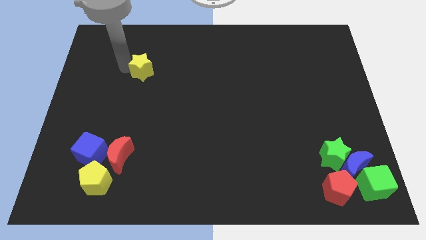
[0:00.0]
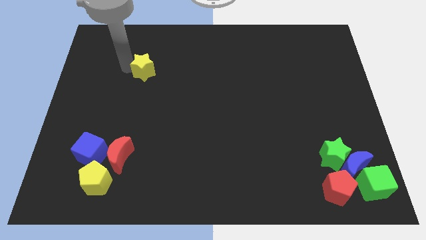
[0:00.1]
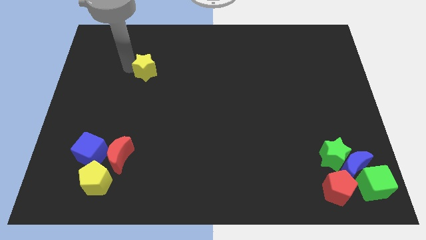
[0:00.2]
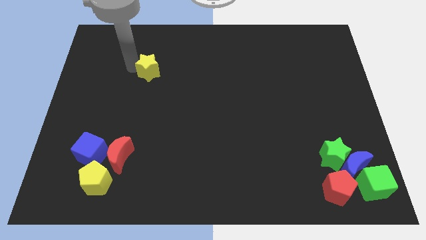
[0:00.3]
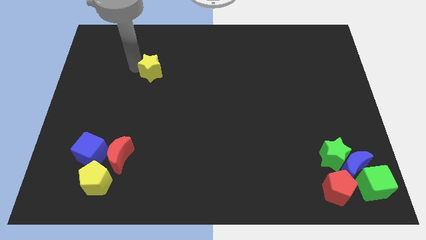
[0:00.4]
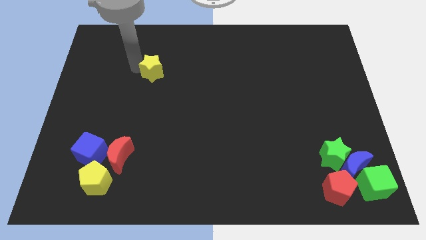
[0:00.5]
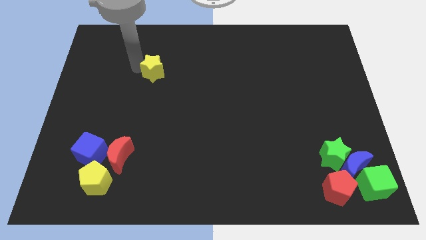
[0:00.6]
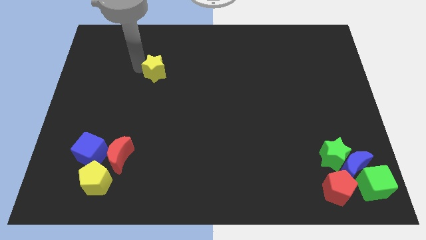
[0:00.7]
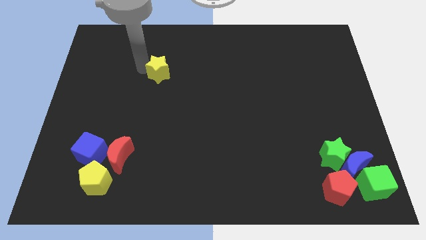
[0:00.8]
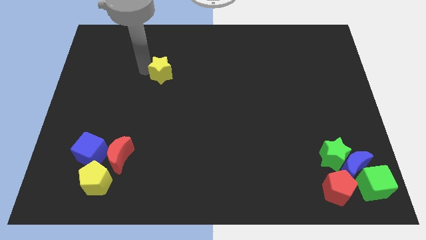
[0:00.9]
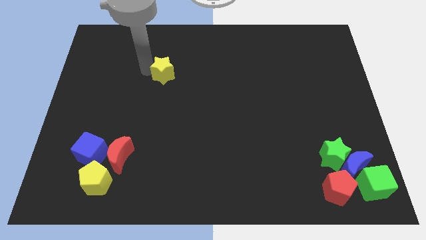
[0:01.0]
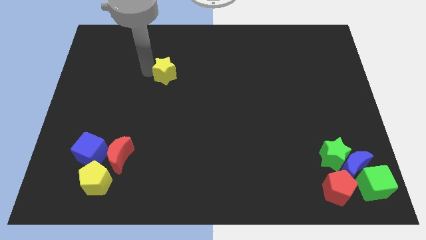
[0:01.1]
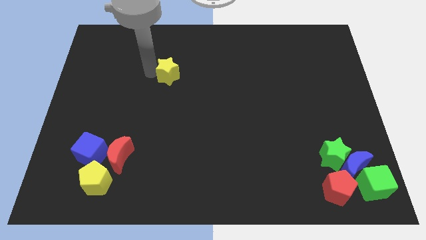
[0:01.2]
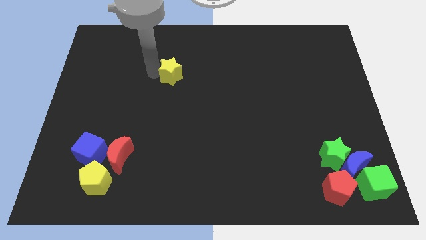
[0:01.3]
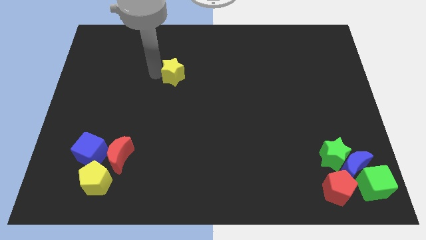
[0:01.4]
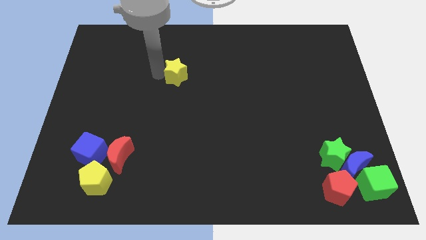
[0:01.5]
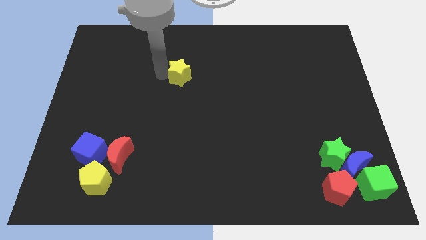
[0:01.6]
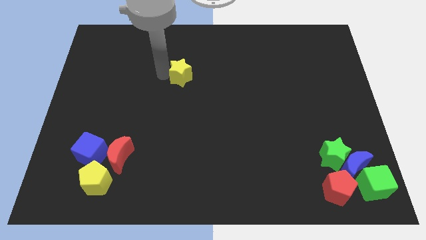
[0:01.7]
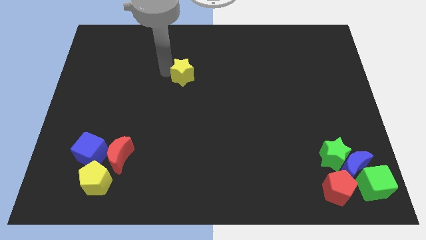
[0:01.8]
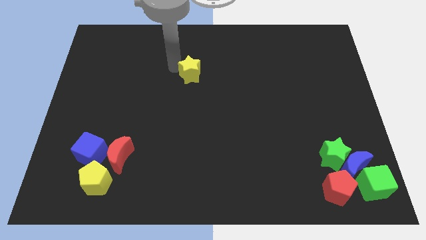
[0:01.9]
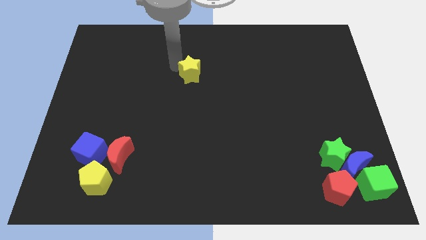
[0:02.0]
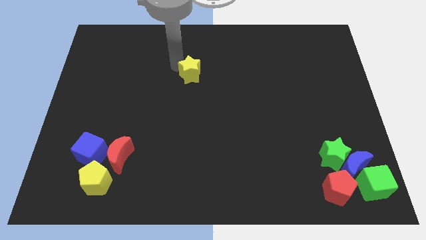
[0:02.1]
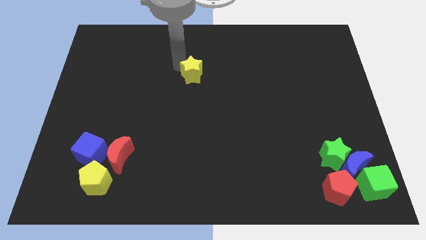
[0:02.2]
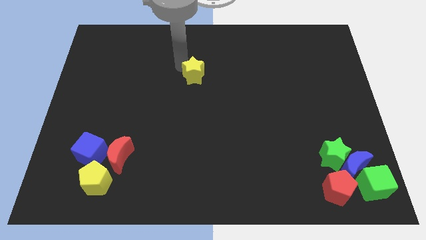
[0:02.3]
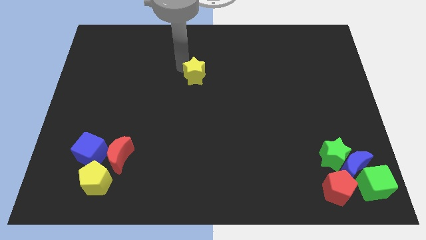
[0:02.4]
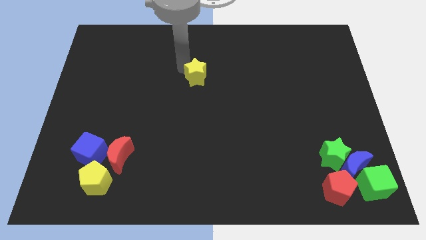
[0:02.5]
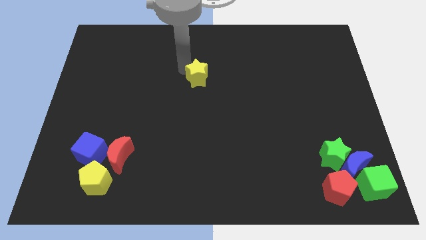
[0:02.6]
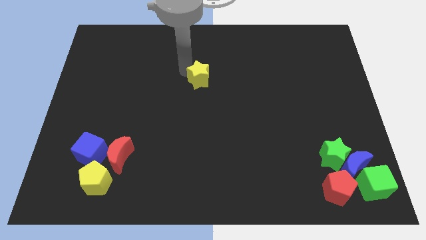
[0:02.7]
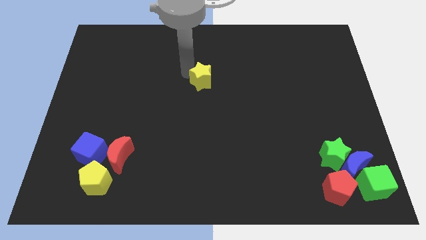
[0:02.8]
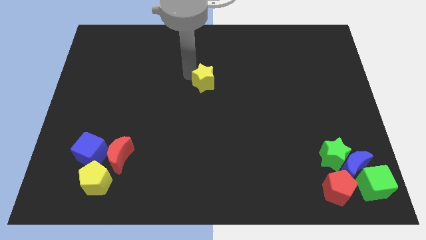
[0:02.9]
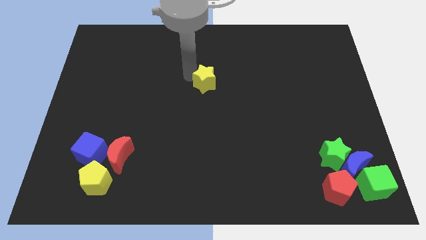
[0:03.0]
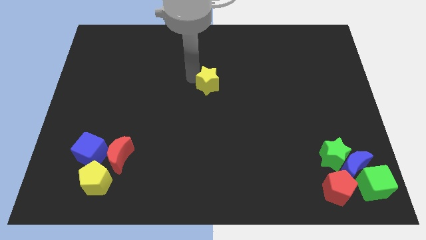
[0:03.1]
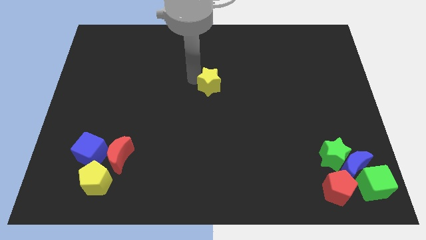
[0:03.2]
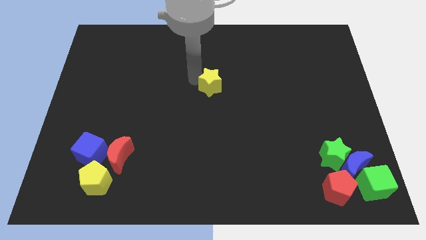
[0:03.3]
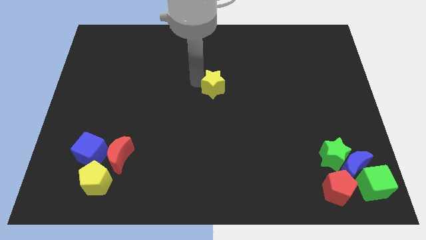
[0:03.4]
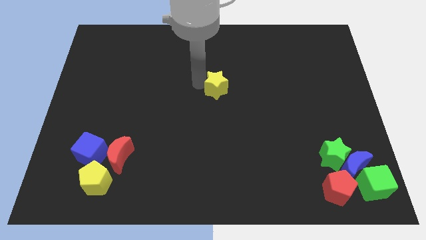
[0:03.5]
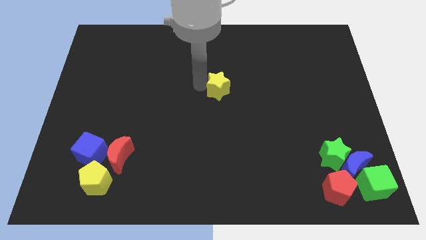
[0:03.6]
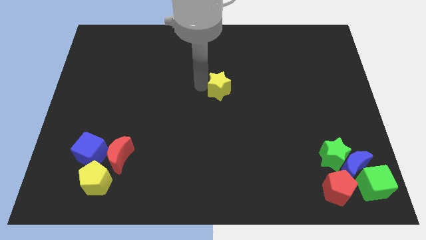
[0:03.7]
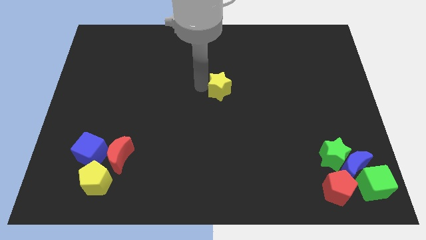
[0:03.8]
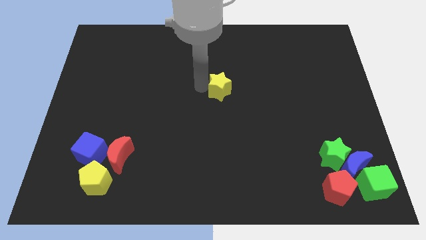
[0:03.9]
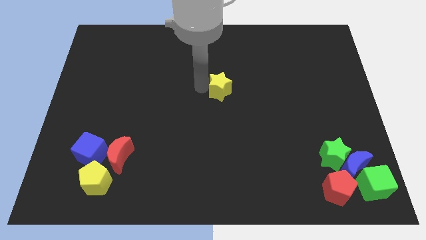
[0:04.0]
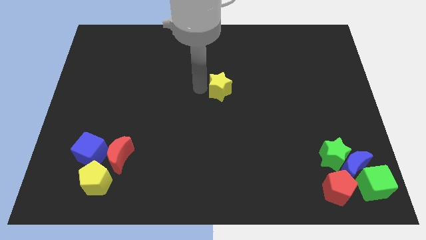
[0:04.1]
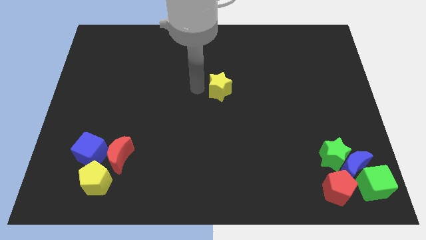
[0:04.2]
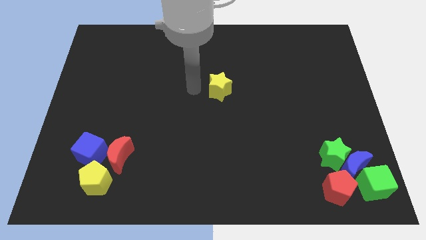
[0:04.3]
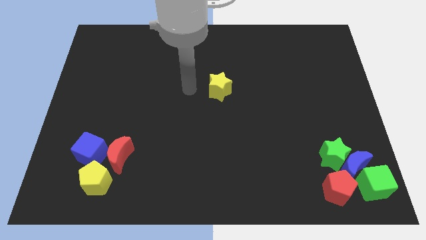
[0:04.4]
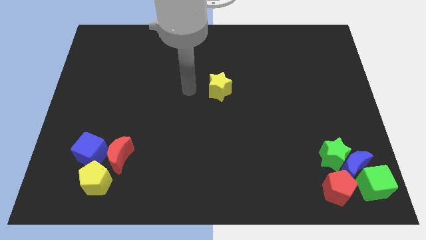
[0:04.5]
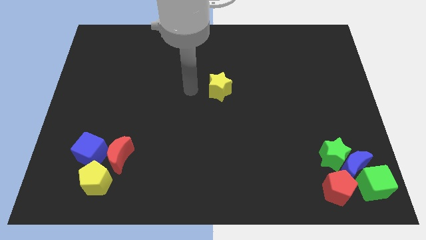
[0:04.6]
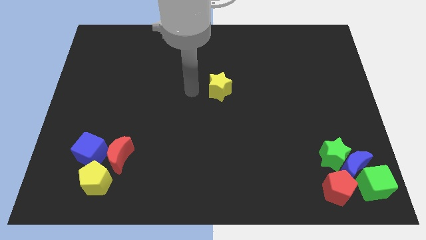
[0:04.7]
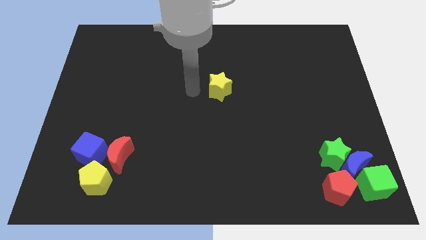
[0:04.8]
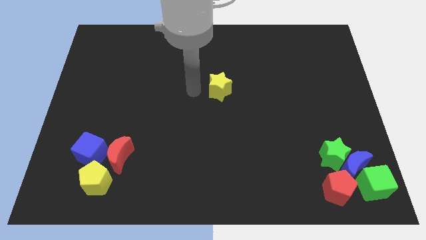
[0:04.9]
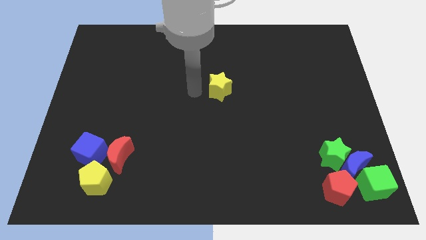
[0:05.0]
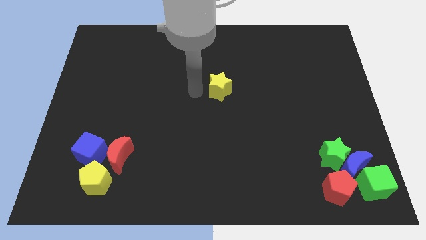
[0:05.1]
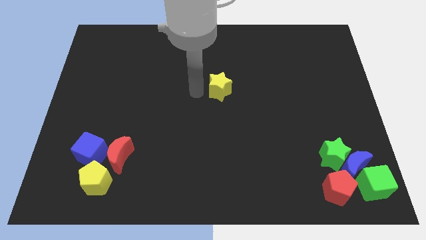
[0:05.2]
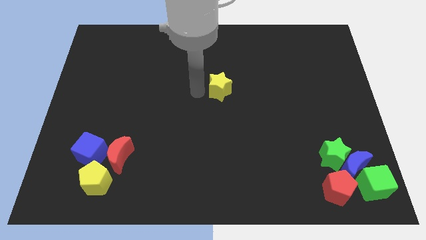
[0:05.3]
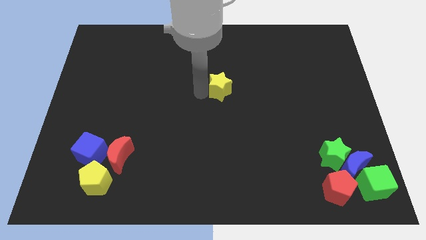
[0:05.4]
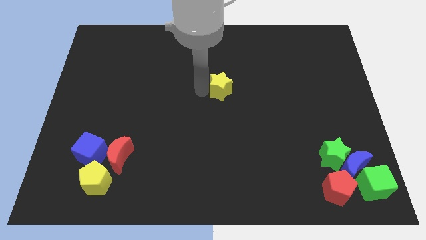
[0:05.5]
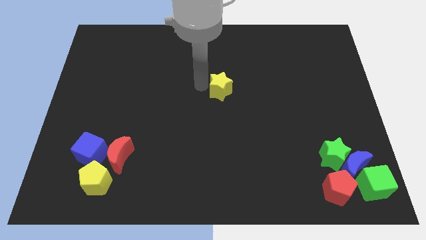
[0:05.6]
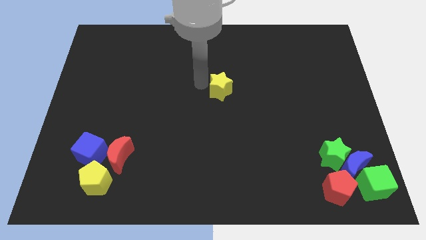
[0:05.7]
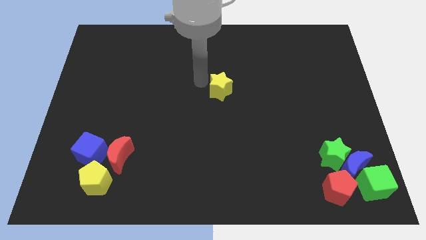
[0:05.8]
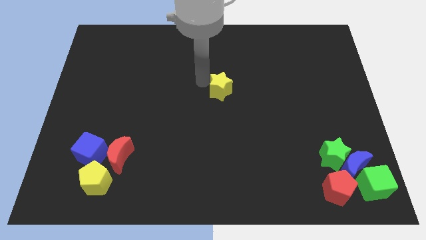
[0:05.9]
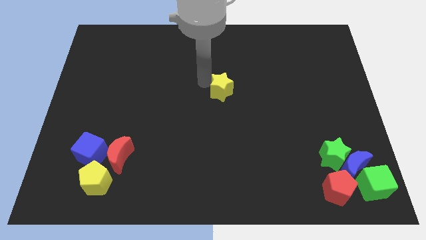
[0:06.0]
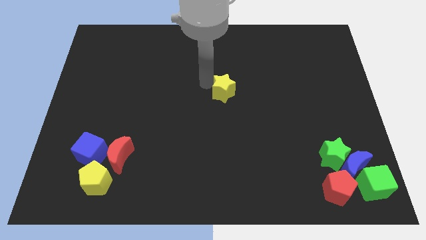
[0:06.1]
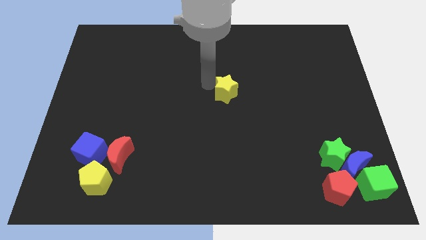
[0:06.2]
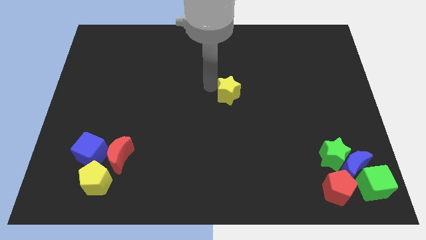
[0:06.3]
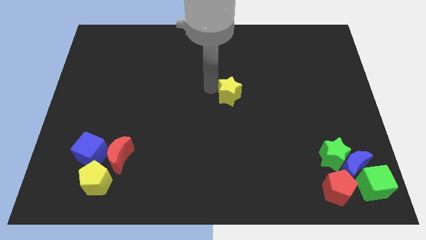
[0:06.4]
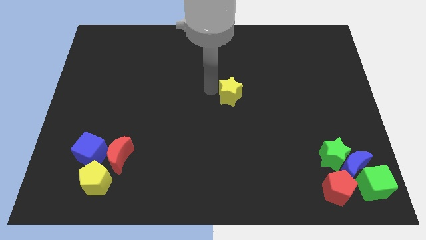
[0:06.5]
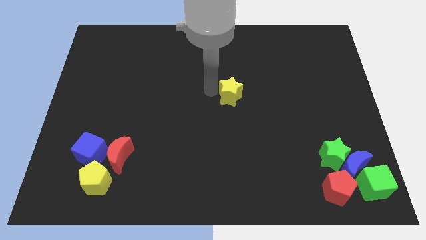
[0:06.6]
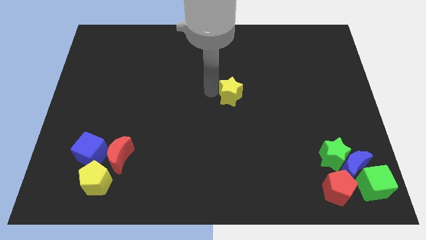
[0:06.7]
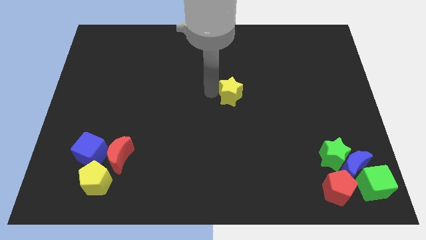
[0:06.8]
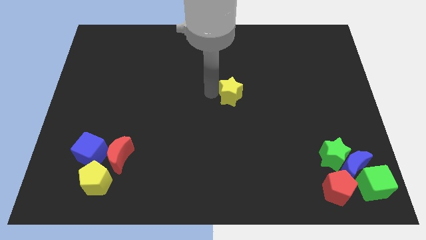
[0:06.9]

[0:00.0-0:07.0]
place the yellow star at the center of the board

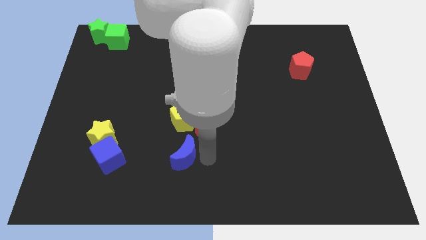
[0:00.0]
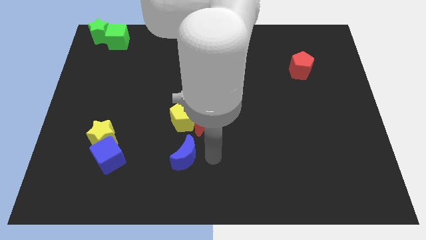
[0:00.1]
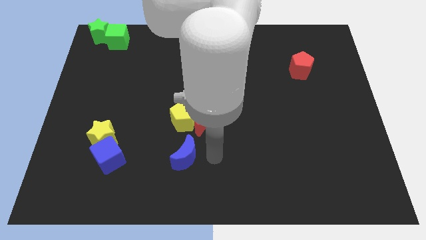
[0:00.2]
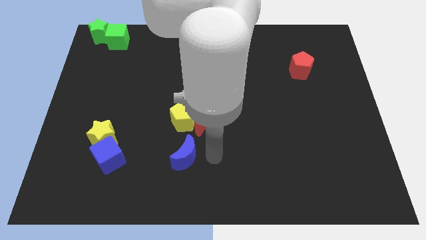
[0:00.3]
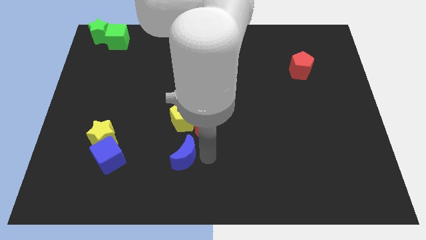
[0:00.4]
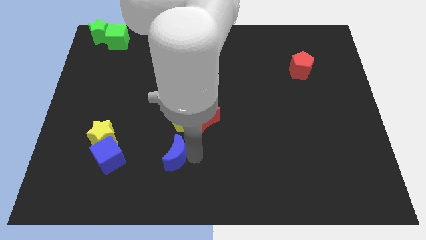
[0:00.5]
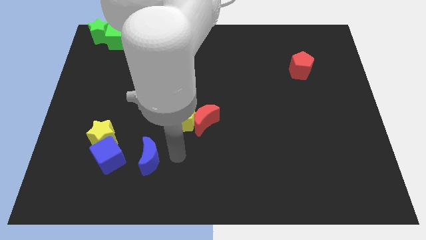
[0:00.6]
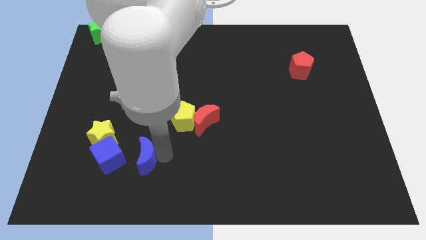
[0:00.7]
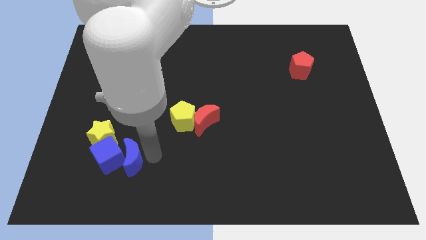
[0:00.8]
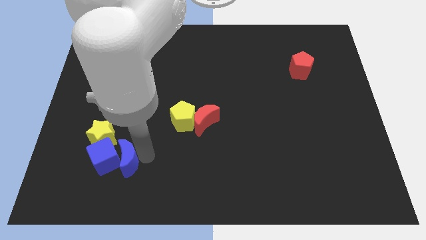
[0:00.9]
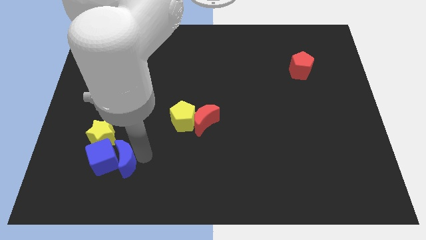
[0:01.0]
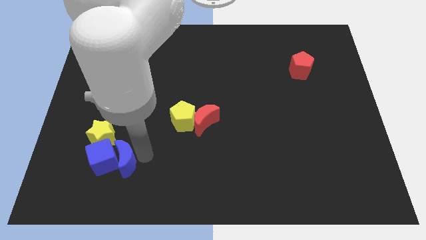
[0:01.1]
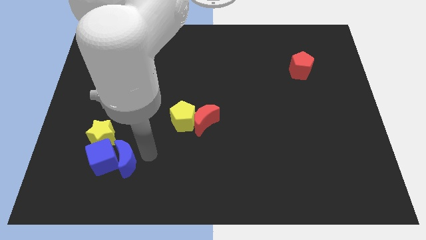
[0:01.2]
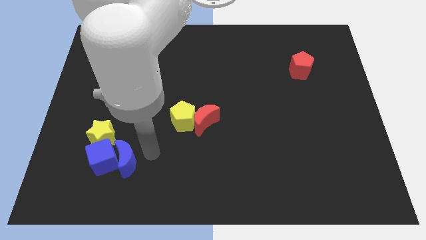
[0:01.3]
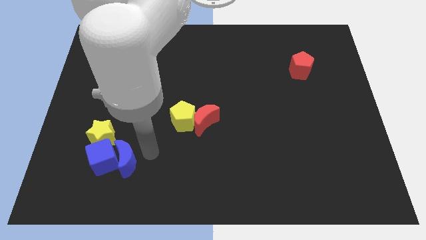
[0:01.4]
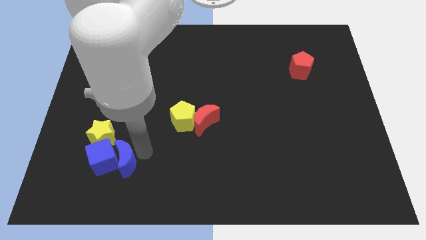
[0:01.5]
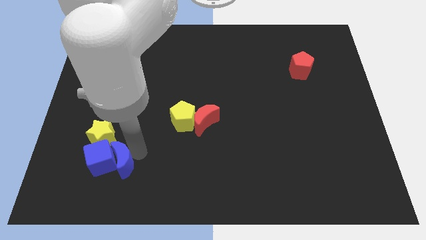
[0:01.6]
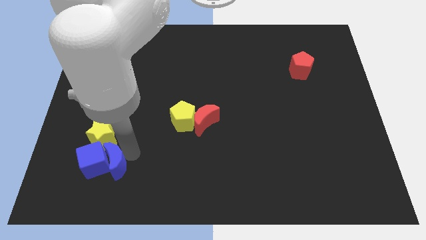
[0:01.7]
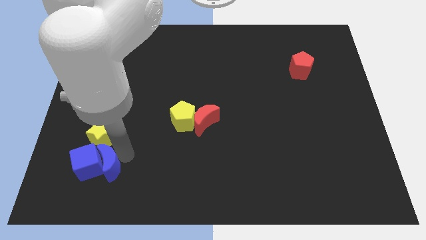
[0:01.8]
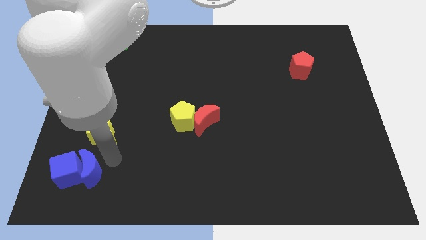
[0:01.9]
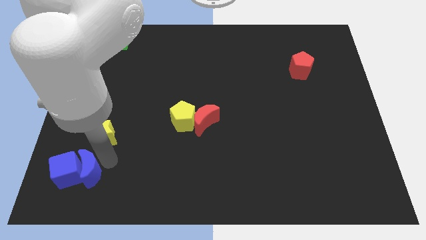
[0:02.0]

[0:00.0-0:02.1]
slide the blue moon and blue cube to the bottom left corner of the board
